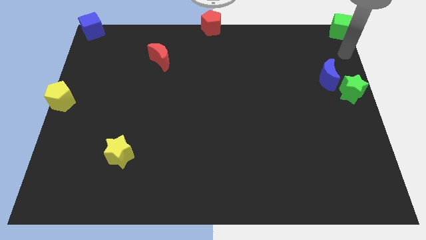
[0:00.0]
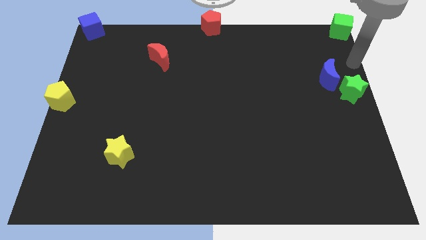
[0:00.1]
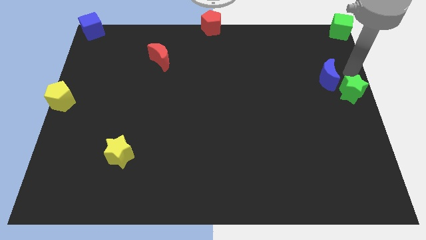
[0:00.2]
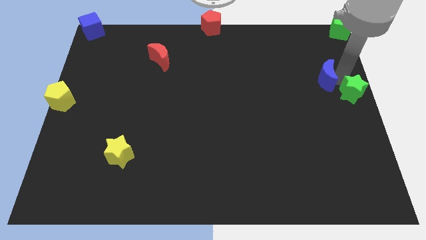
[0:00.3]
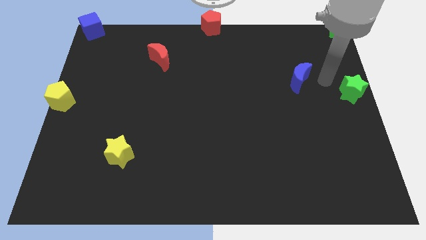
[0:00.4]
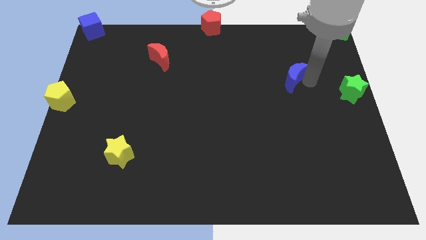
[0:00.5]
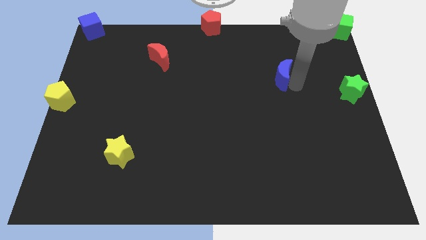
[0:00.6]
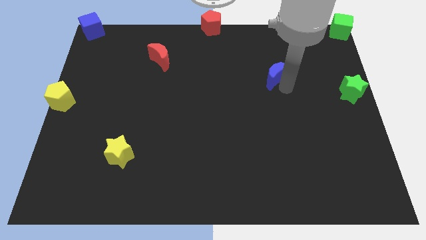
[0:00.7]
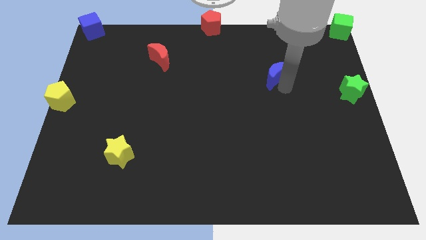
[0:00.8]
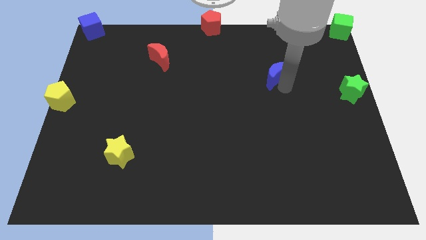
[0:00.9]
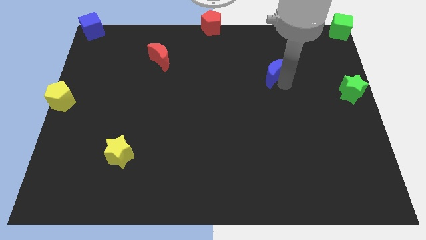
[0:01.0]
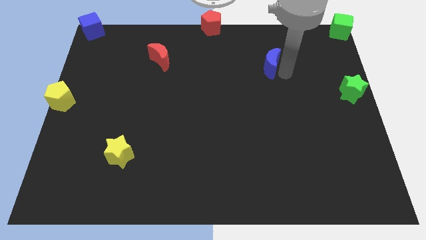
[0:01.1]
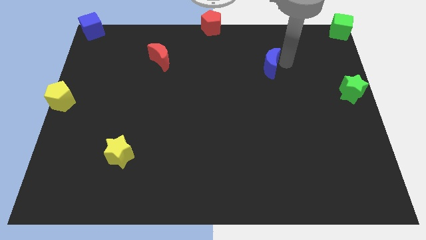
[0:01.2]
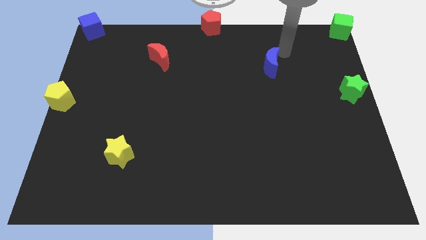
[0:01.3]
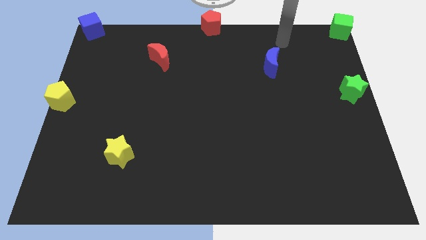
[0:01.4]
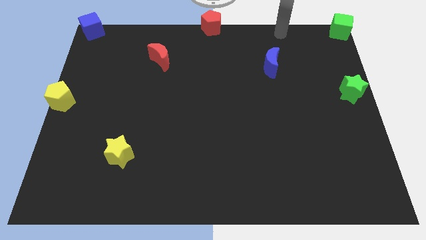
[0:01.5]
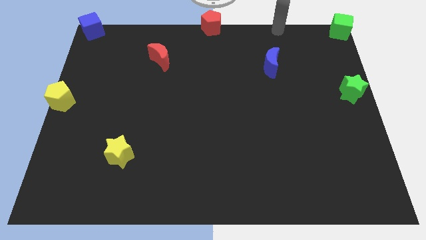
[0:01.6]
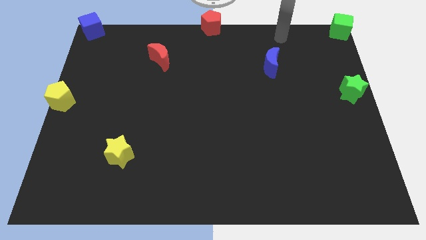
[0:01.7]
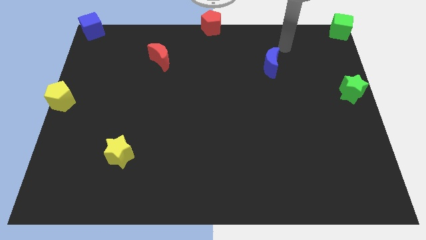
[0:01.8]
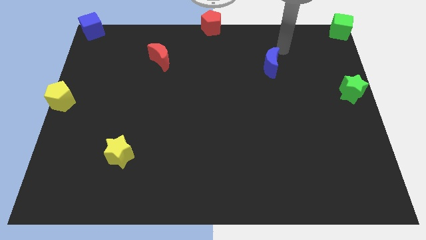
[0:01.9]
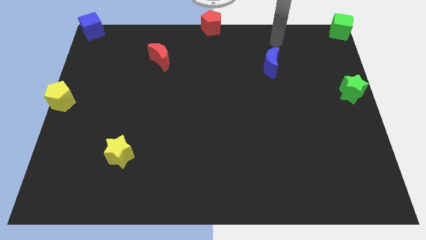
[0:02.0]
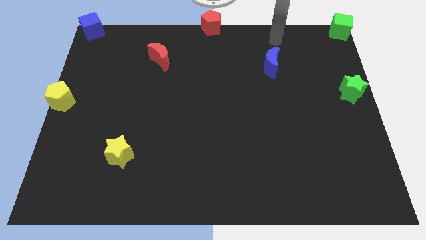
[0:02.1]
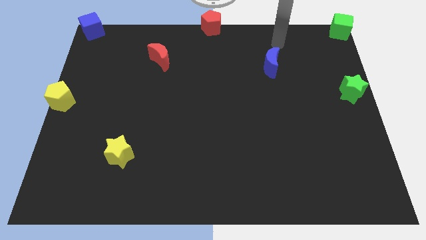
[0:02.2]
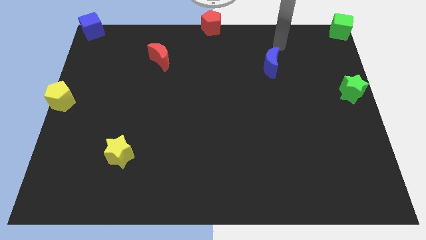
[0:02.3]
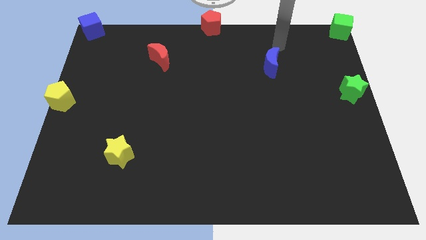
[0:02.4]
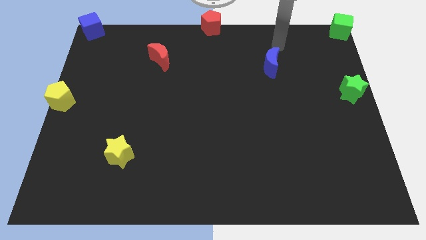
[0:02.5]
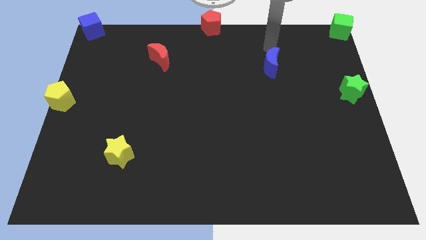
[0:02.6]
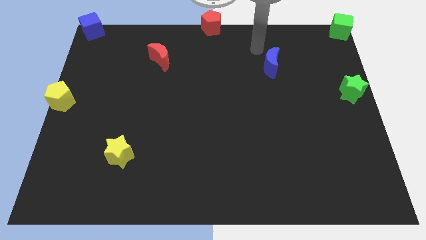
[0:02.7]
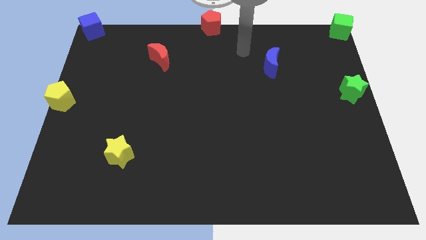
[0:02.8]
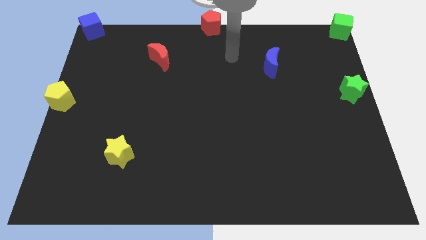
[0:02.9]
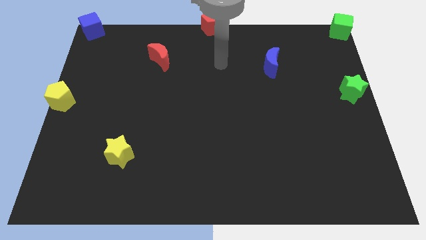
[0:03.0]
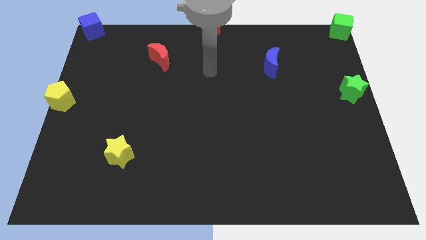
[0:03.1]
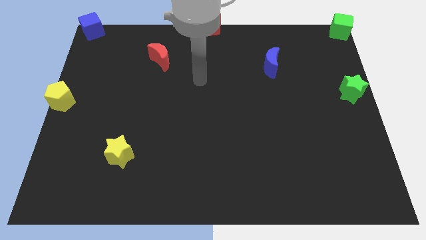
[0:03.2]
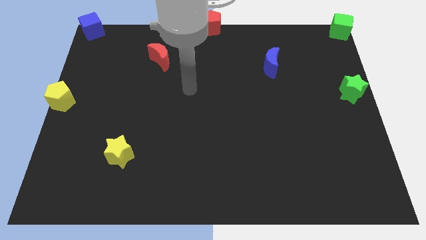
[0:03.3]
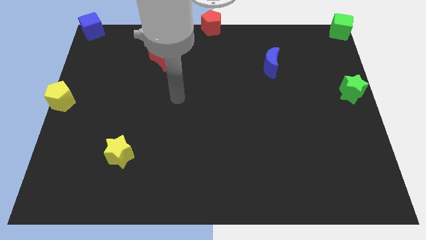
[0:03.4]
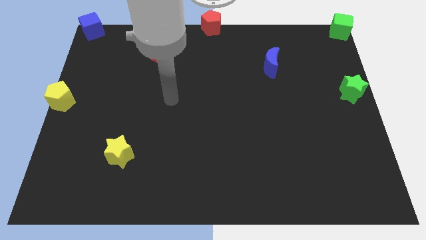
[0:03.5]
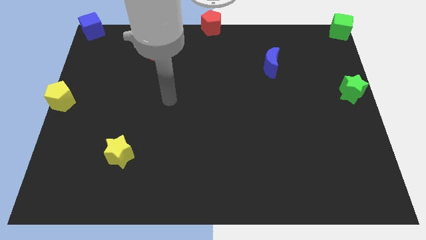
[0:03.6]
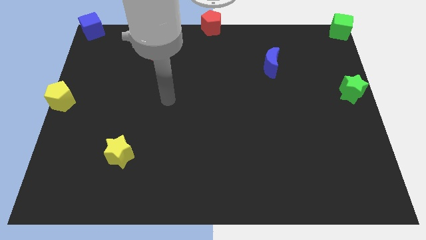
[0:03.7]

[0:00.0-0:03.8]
move the blue crescent slightly towards the top right

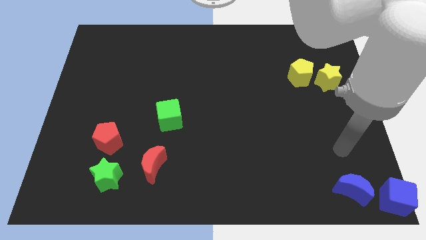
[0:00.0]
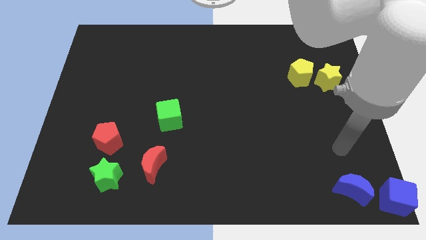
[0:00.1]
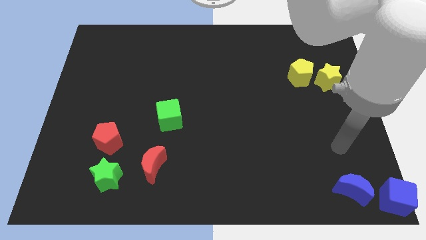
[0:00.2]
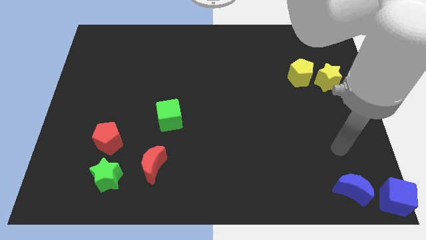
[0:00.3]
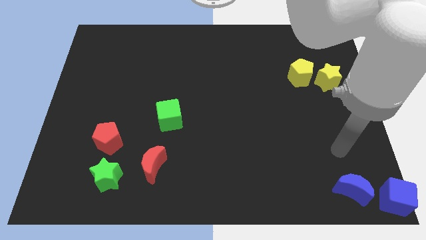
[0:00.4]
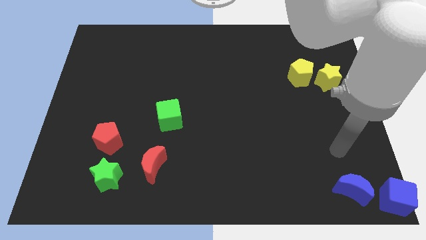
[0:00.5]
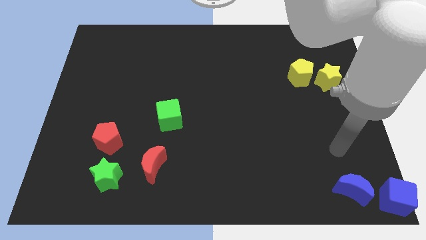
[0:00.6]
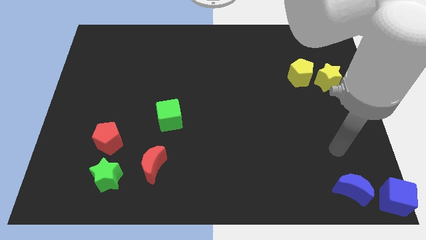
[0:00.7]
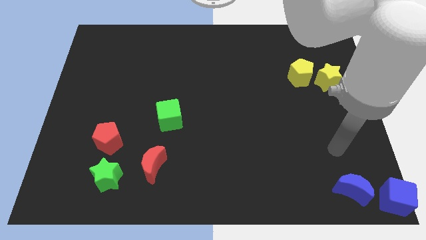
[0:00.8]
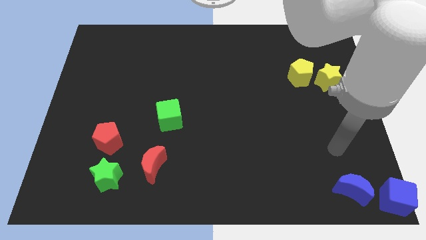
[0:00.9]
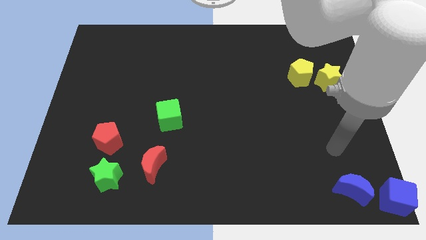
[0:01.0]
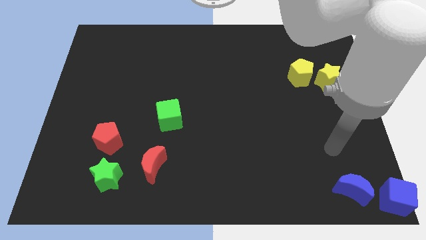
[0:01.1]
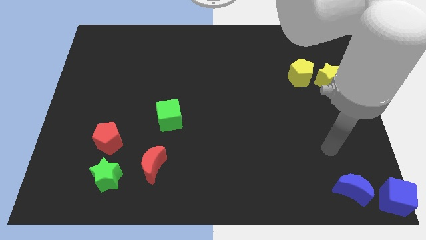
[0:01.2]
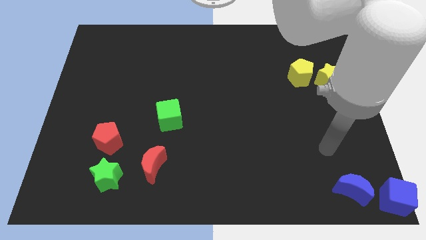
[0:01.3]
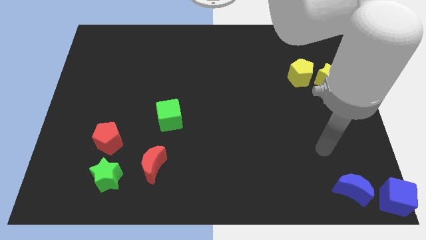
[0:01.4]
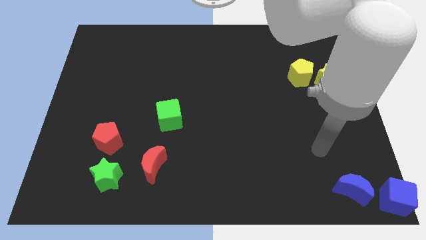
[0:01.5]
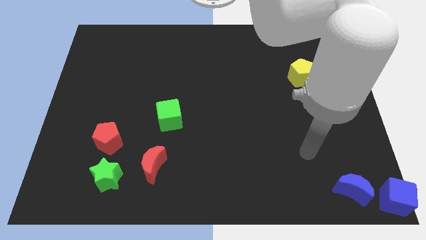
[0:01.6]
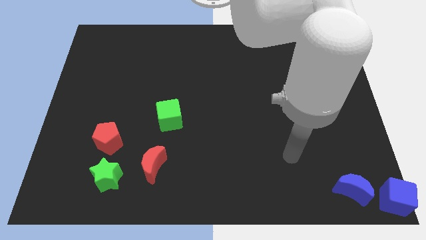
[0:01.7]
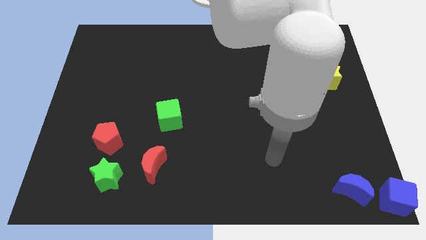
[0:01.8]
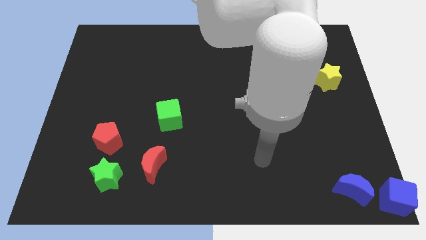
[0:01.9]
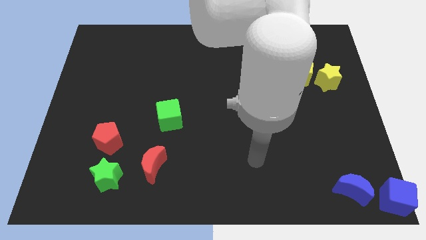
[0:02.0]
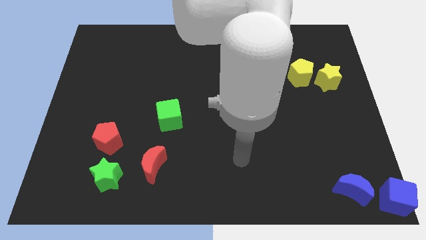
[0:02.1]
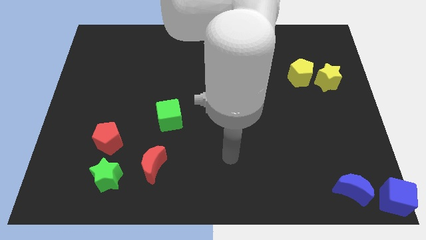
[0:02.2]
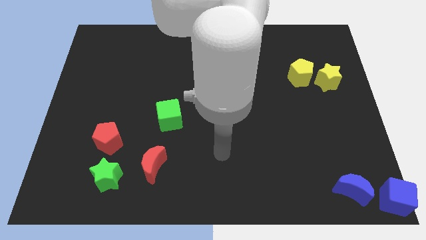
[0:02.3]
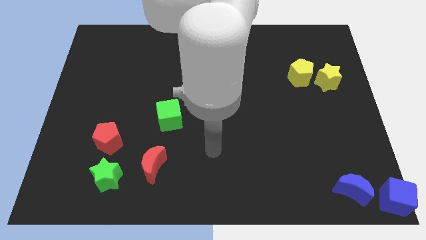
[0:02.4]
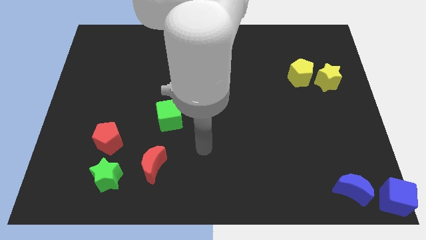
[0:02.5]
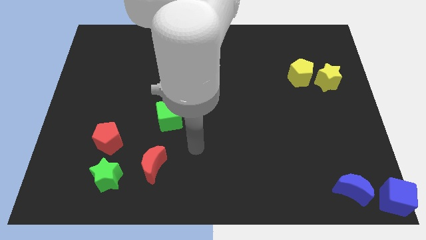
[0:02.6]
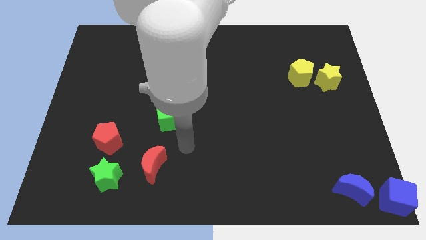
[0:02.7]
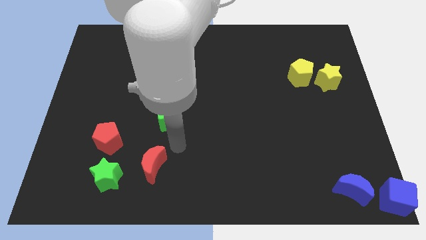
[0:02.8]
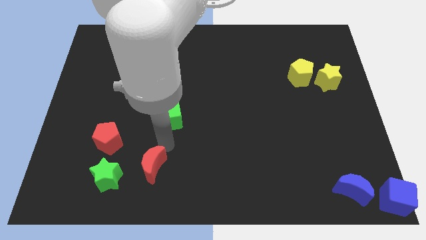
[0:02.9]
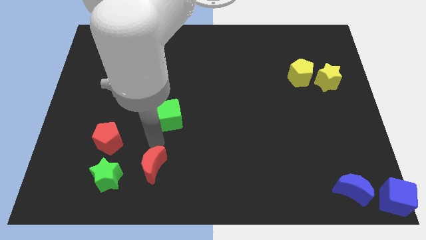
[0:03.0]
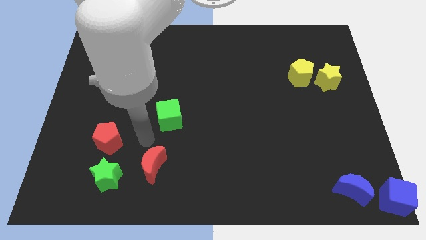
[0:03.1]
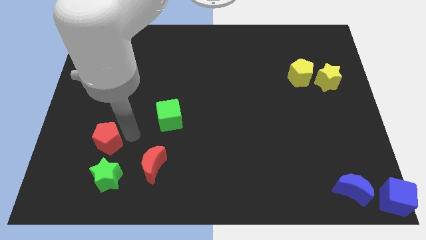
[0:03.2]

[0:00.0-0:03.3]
move arm to the right of red pentagon

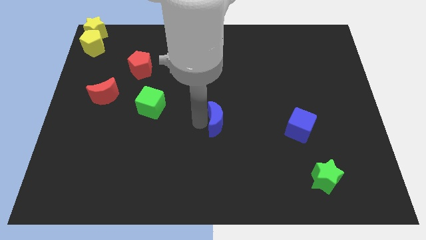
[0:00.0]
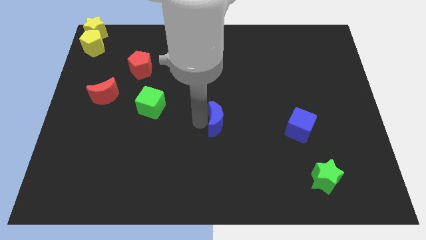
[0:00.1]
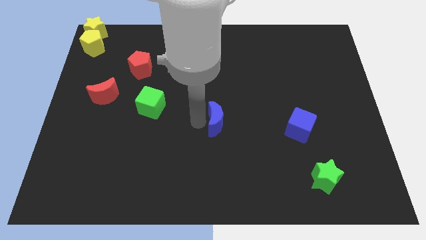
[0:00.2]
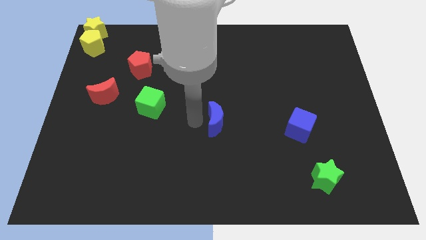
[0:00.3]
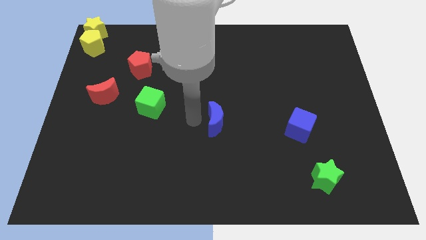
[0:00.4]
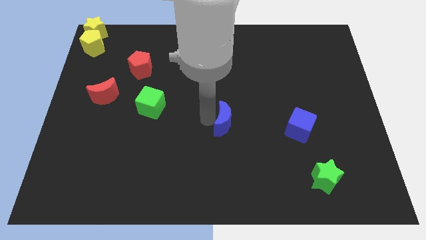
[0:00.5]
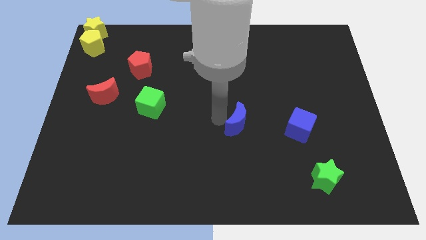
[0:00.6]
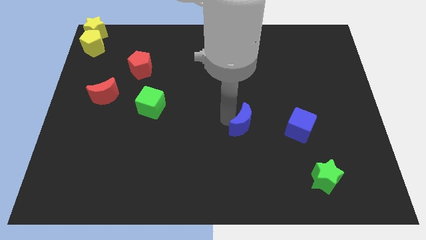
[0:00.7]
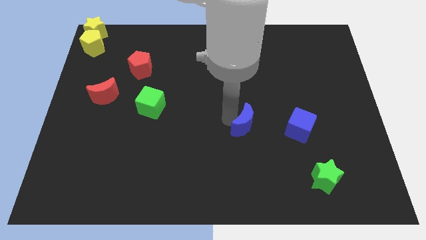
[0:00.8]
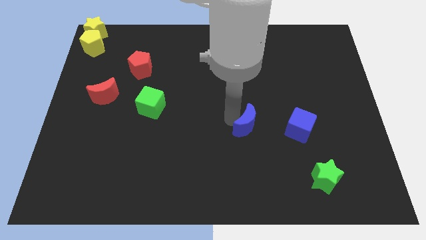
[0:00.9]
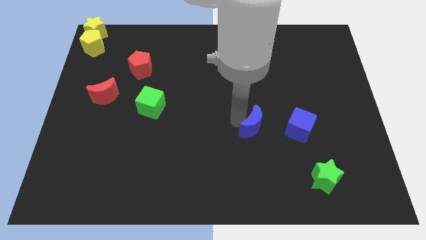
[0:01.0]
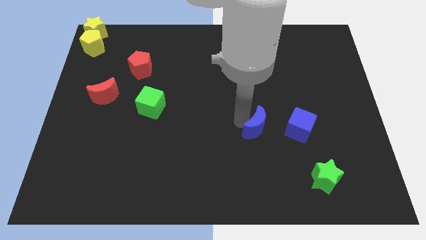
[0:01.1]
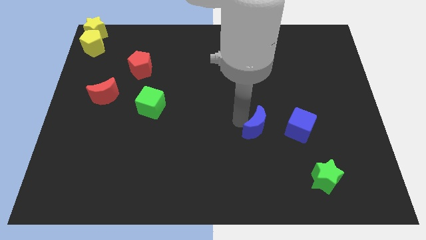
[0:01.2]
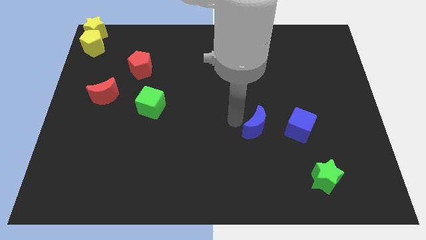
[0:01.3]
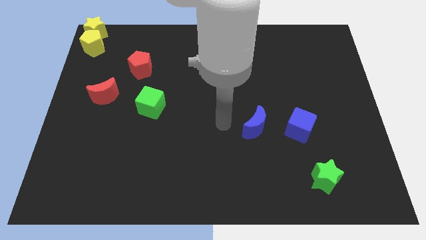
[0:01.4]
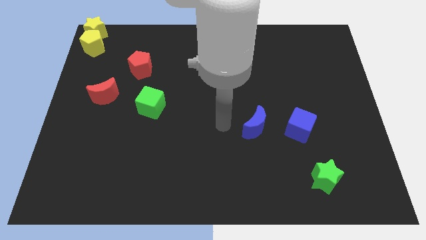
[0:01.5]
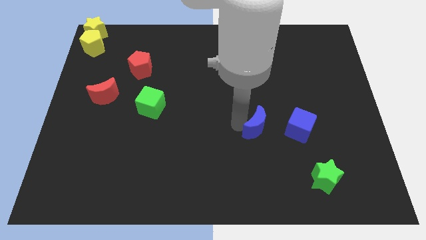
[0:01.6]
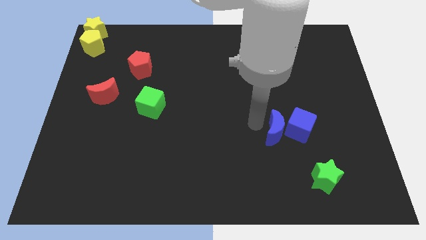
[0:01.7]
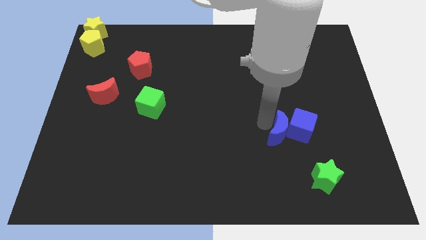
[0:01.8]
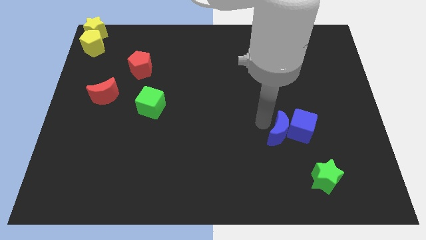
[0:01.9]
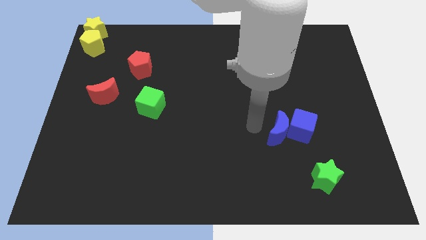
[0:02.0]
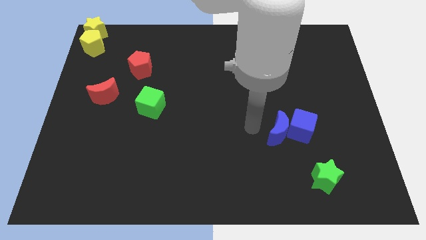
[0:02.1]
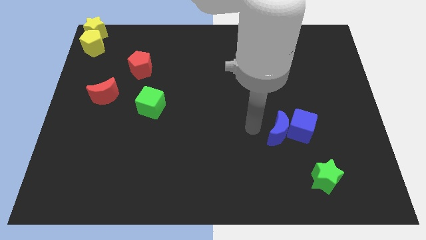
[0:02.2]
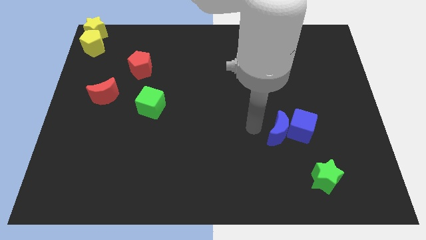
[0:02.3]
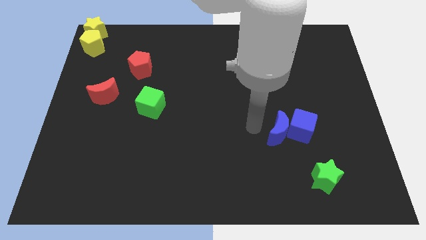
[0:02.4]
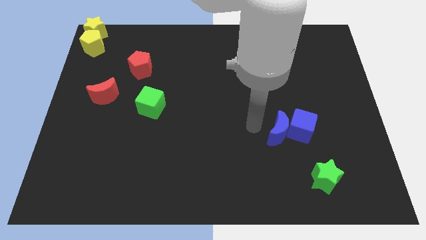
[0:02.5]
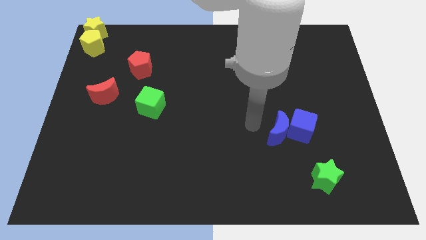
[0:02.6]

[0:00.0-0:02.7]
push the blue crescent beside blue cube
